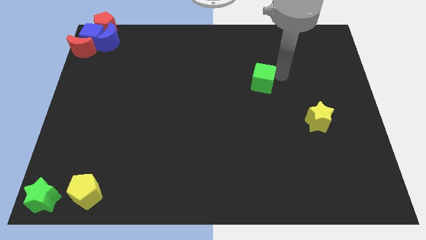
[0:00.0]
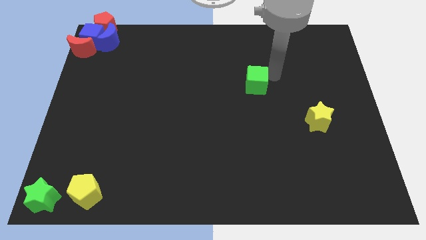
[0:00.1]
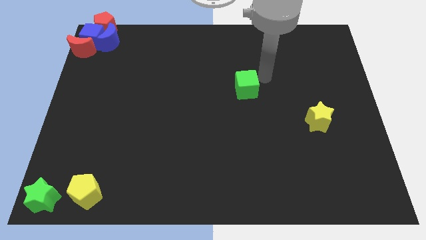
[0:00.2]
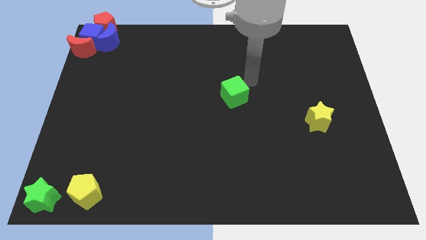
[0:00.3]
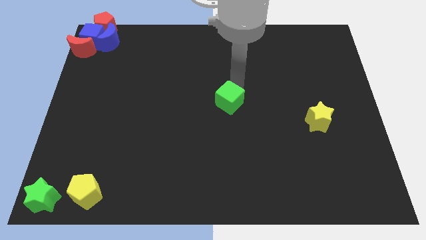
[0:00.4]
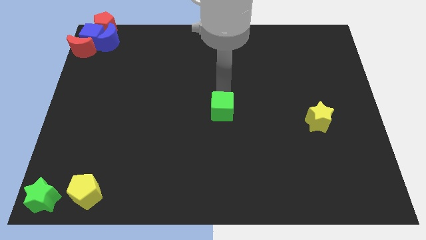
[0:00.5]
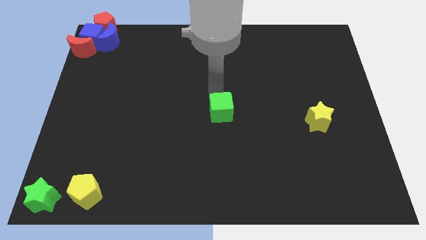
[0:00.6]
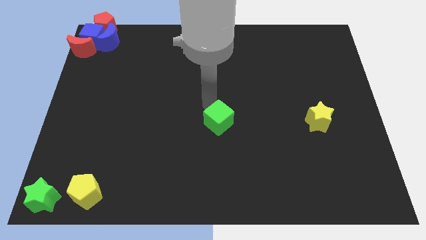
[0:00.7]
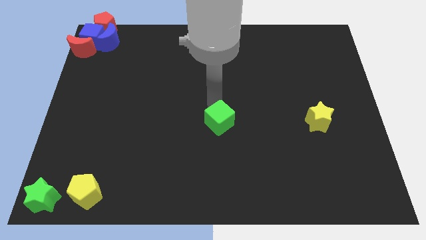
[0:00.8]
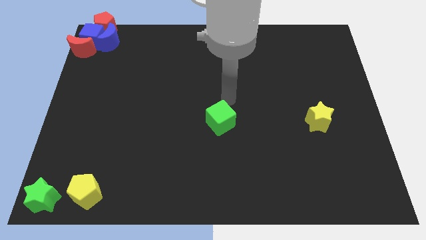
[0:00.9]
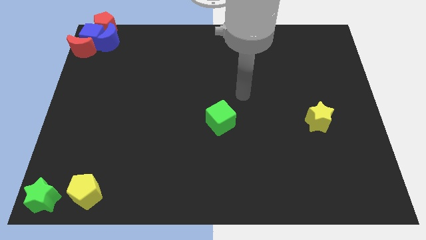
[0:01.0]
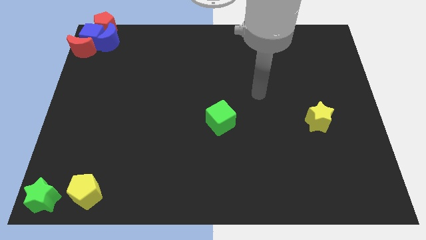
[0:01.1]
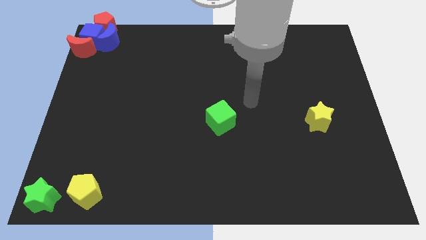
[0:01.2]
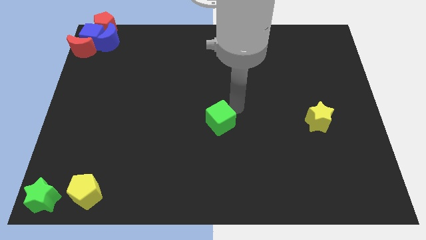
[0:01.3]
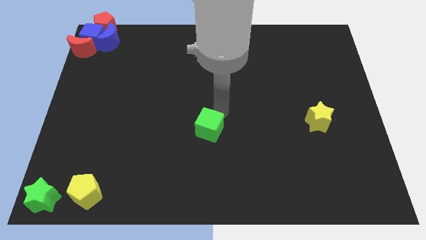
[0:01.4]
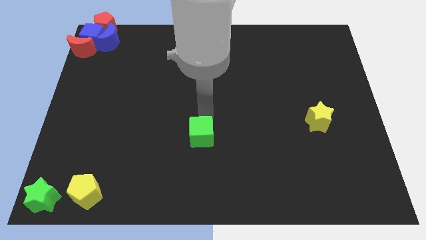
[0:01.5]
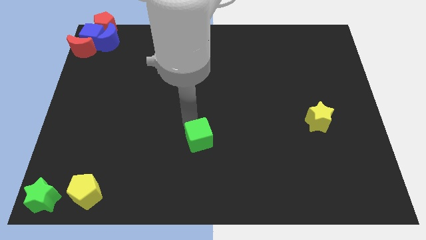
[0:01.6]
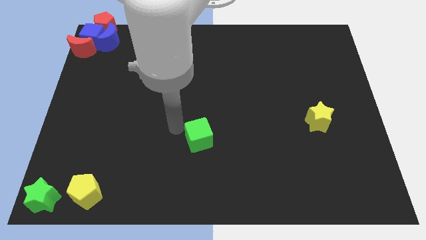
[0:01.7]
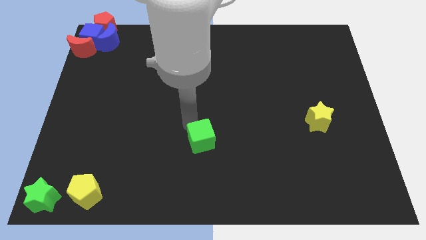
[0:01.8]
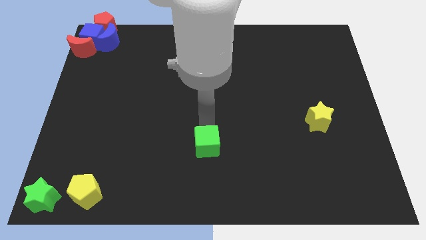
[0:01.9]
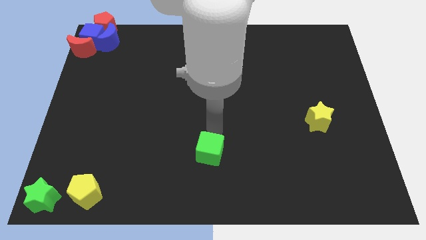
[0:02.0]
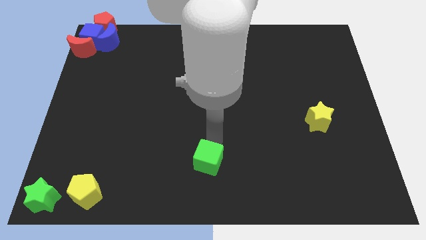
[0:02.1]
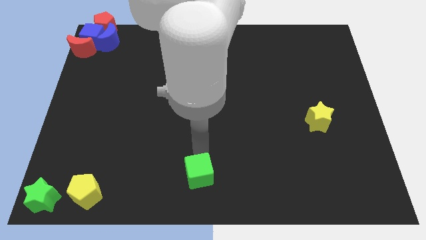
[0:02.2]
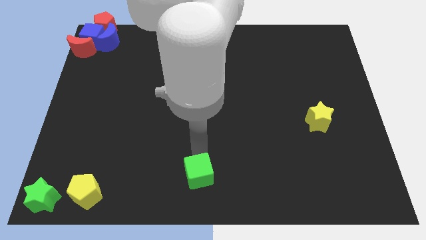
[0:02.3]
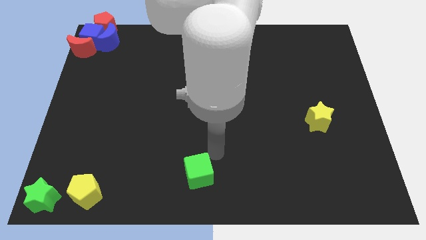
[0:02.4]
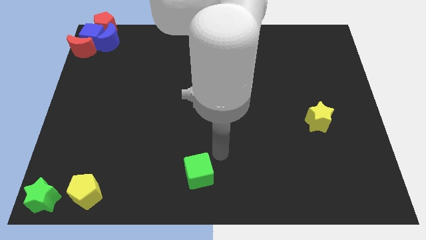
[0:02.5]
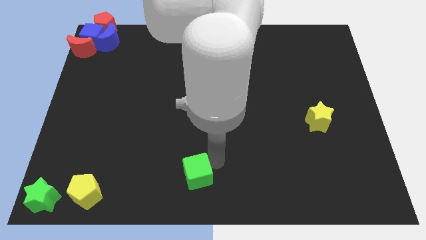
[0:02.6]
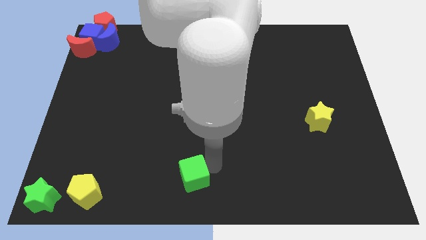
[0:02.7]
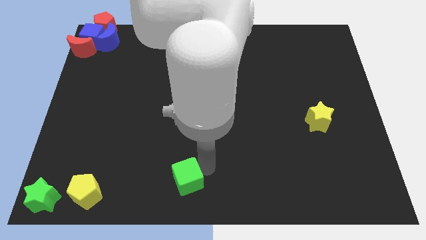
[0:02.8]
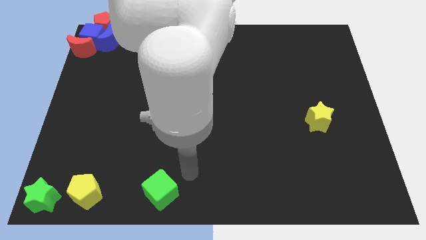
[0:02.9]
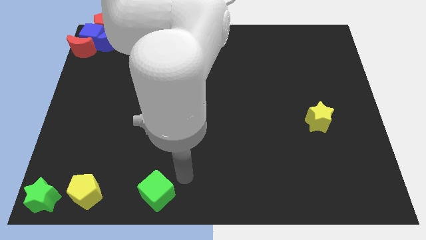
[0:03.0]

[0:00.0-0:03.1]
move the green cube horizontally at the right side of the yellow pentagon

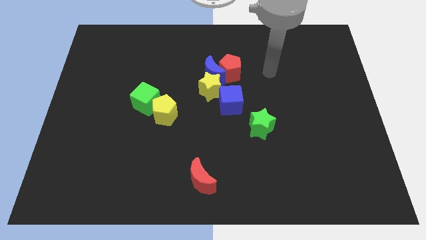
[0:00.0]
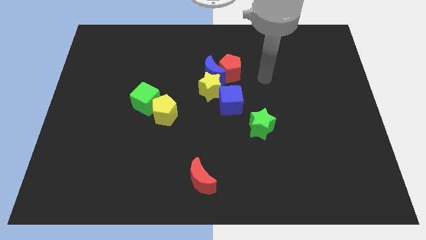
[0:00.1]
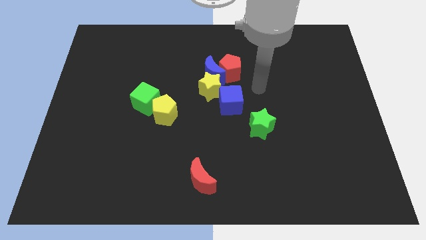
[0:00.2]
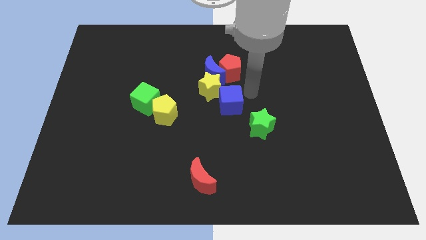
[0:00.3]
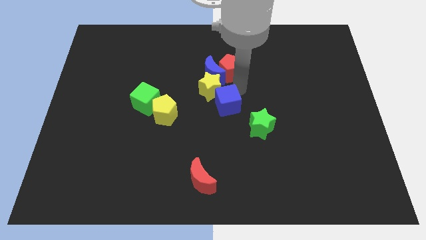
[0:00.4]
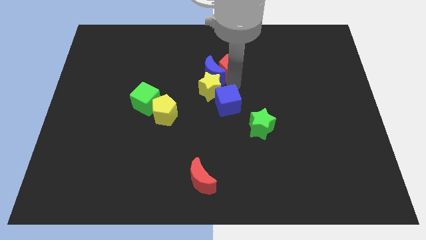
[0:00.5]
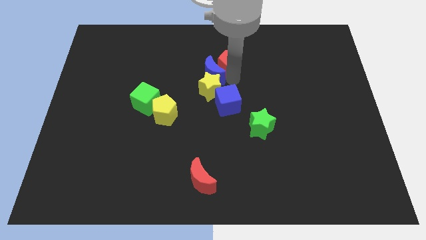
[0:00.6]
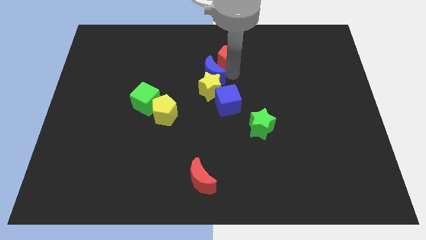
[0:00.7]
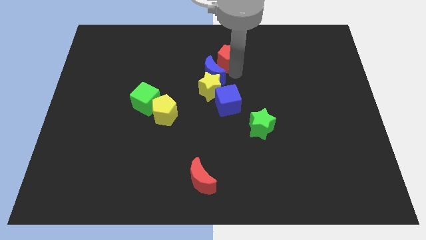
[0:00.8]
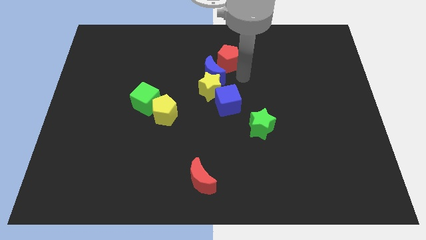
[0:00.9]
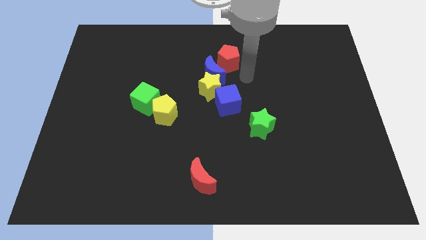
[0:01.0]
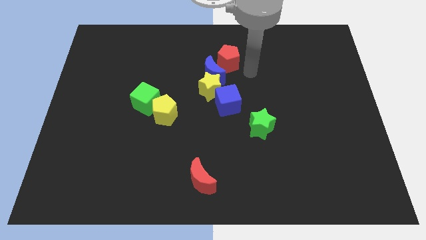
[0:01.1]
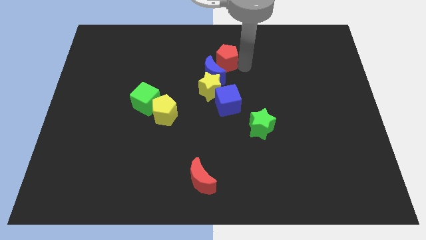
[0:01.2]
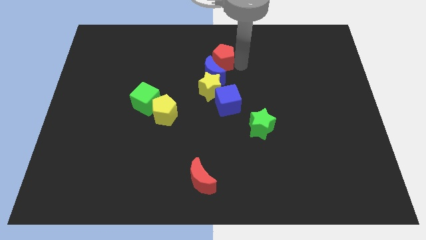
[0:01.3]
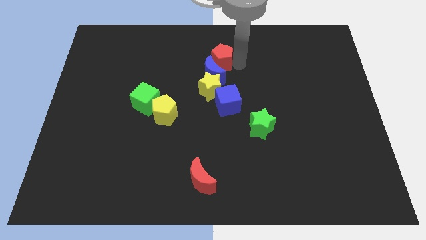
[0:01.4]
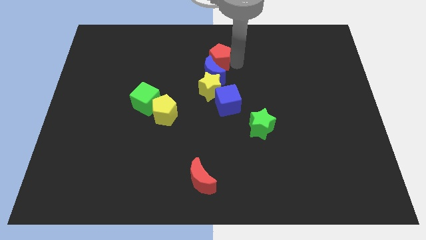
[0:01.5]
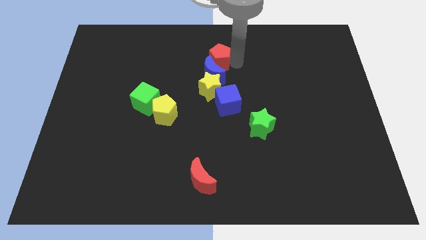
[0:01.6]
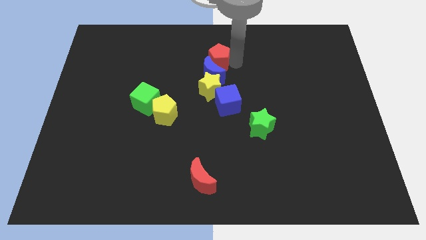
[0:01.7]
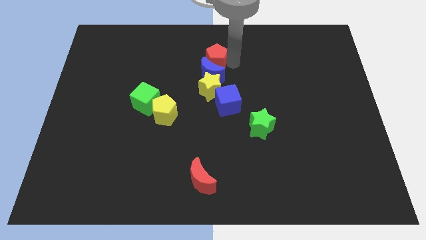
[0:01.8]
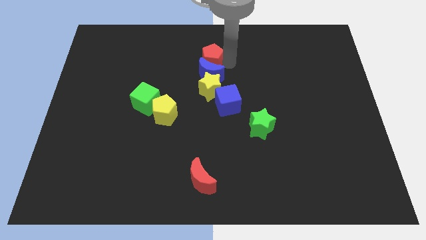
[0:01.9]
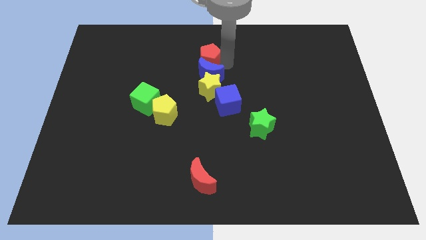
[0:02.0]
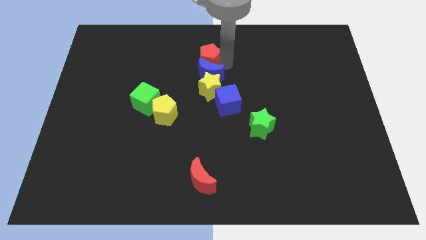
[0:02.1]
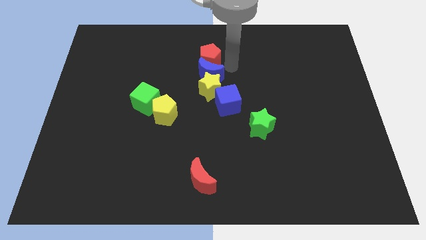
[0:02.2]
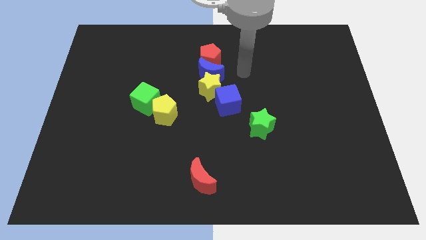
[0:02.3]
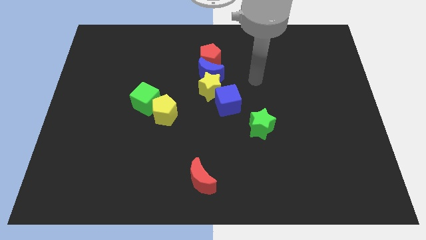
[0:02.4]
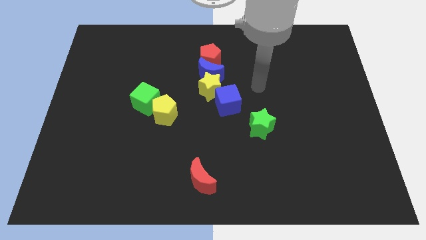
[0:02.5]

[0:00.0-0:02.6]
put the red pentagon above the blue crescent

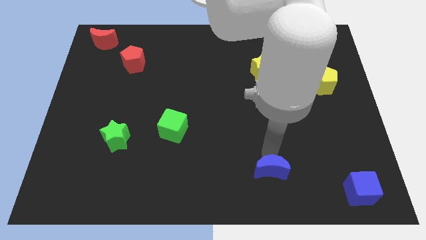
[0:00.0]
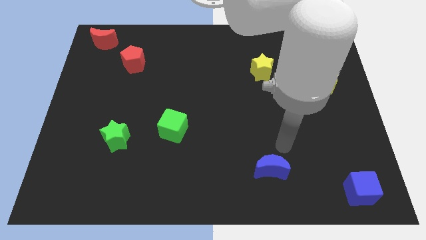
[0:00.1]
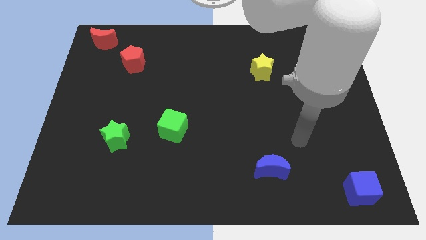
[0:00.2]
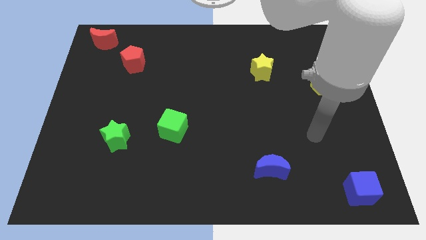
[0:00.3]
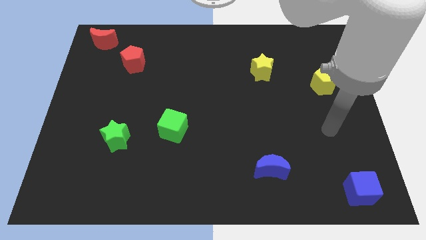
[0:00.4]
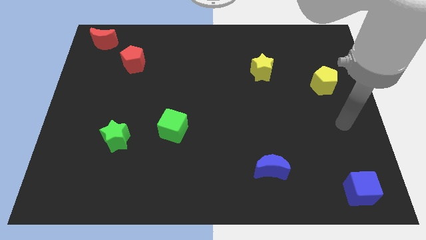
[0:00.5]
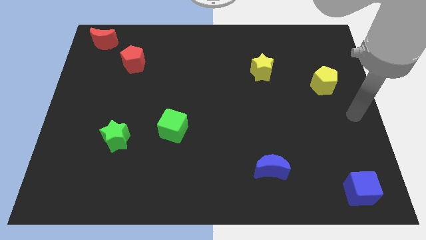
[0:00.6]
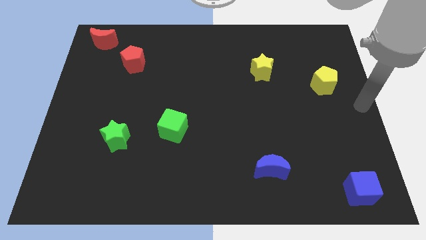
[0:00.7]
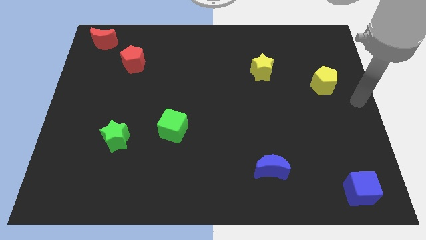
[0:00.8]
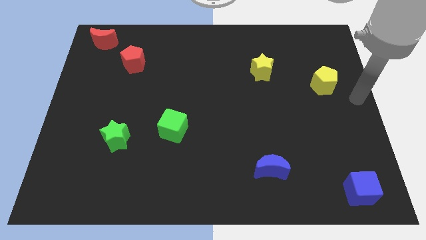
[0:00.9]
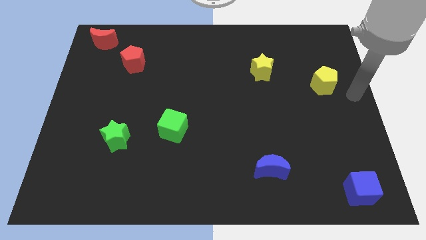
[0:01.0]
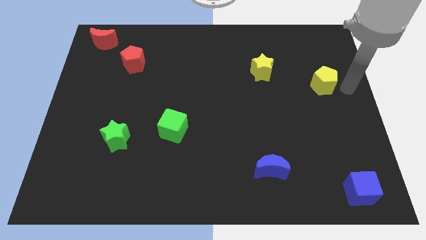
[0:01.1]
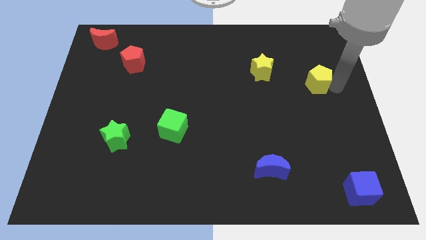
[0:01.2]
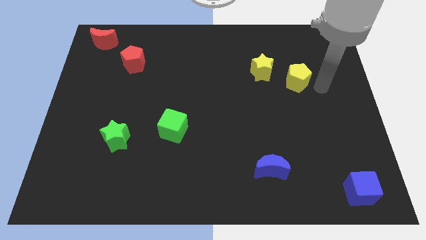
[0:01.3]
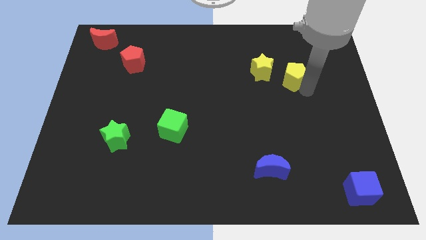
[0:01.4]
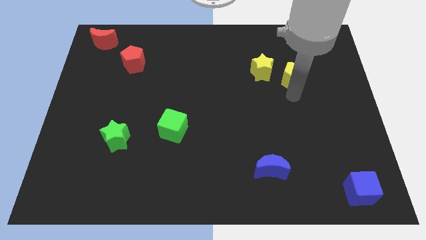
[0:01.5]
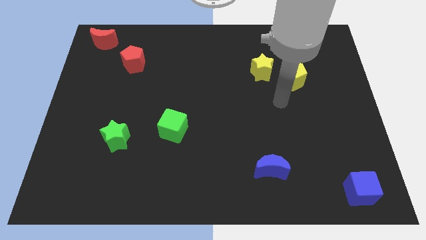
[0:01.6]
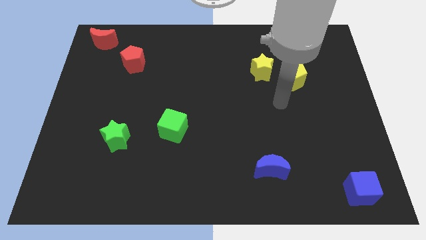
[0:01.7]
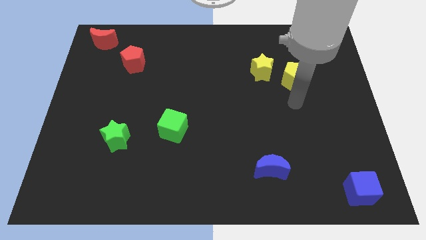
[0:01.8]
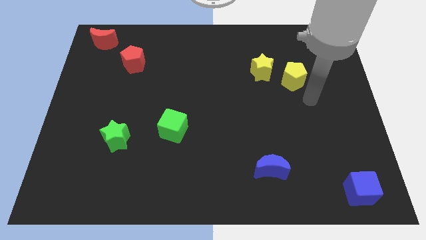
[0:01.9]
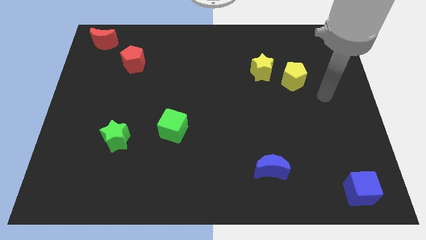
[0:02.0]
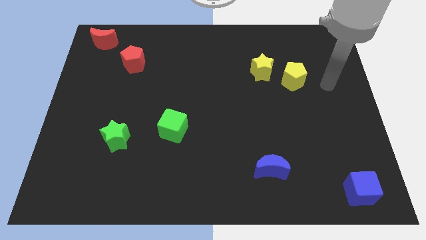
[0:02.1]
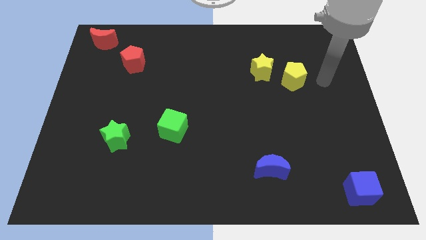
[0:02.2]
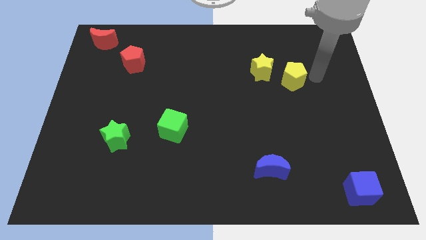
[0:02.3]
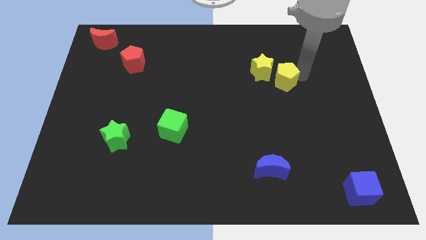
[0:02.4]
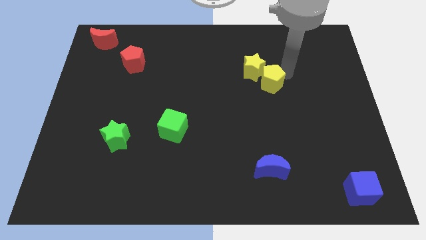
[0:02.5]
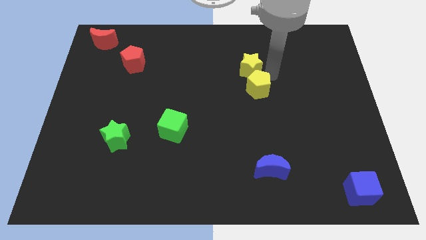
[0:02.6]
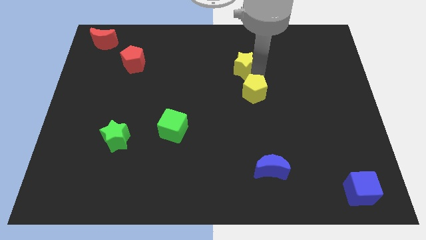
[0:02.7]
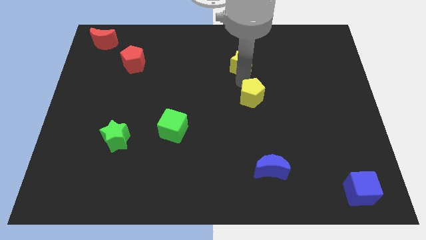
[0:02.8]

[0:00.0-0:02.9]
move the yellow pentagon to the bottom of the yellow star

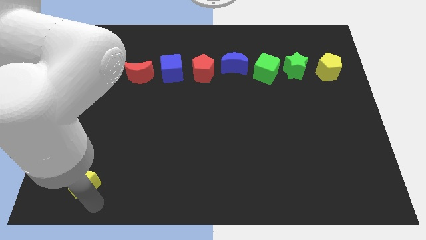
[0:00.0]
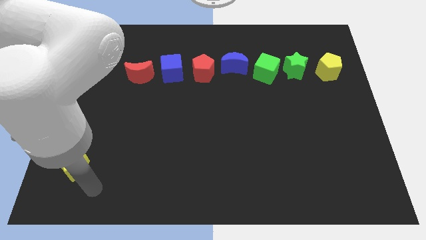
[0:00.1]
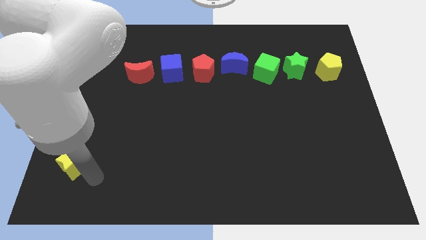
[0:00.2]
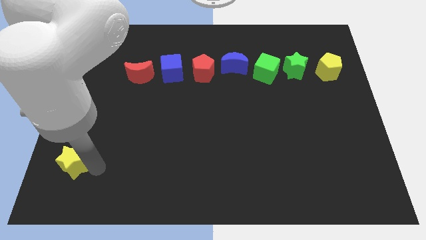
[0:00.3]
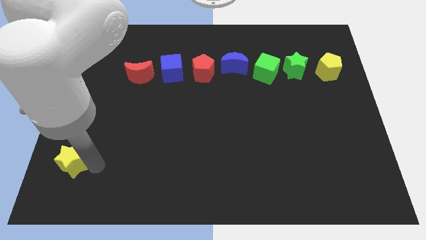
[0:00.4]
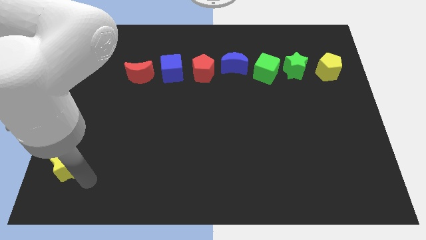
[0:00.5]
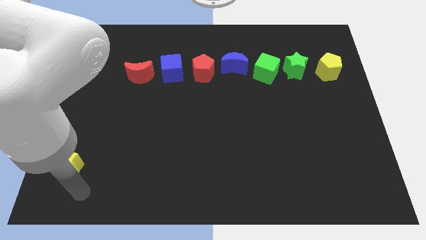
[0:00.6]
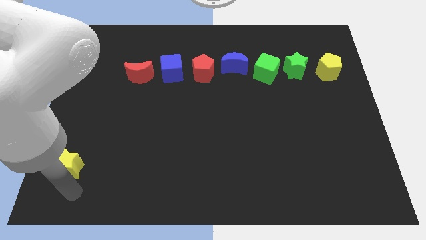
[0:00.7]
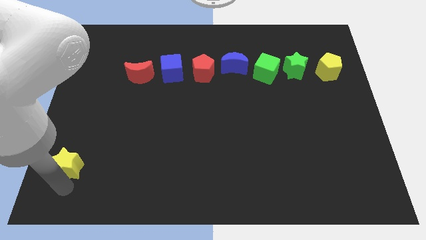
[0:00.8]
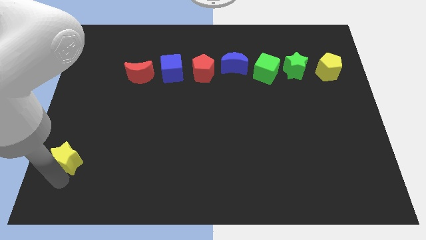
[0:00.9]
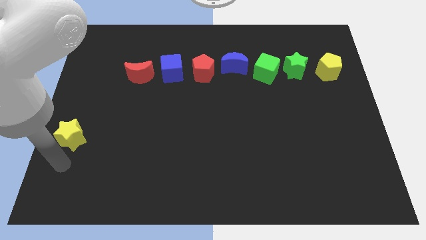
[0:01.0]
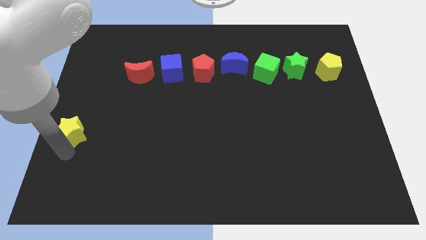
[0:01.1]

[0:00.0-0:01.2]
move the yellow star towards the left center of the board
